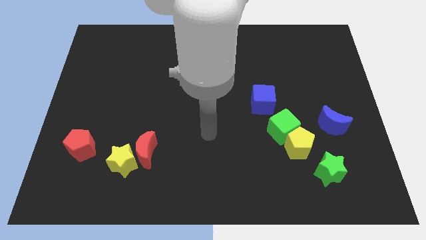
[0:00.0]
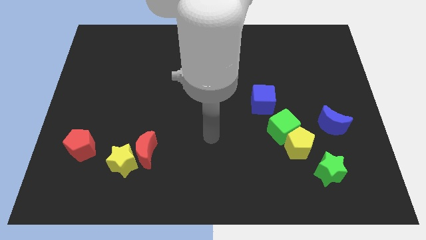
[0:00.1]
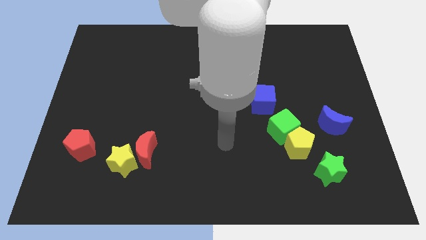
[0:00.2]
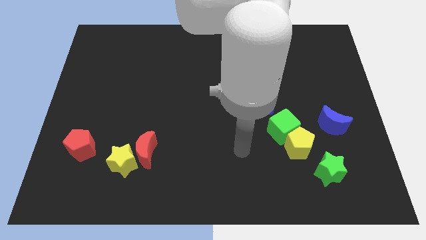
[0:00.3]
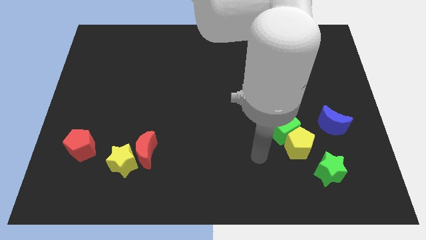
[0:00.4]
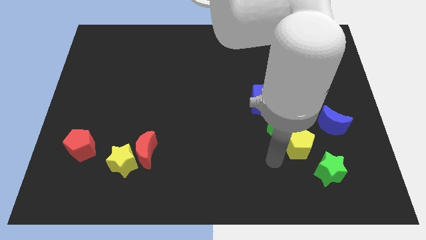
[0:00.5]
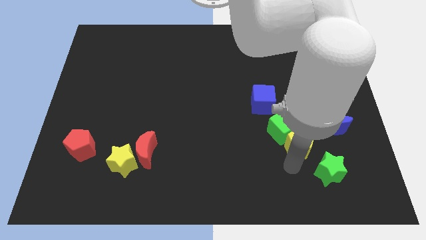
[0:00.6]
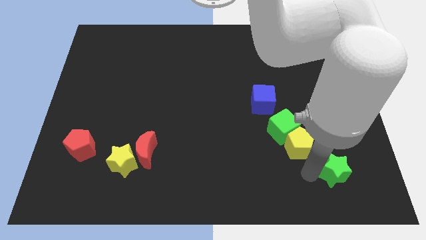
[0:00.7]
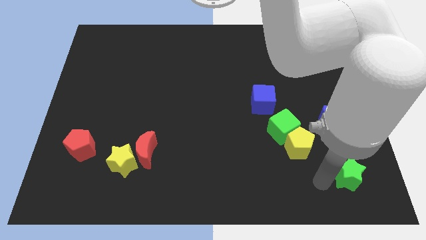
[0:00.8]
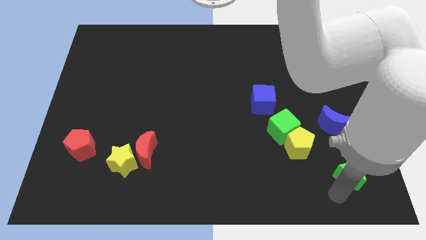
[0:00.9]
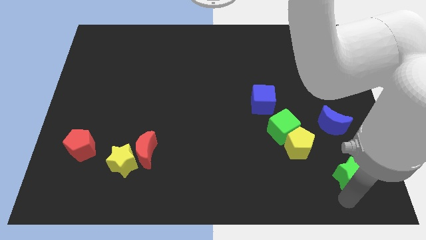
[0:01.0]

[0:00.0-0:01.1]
push the green star slightly up

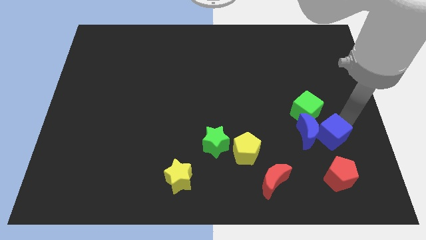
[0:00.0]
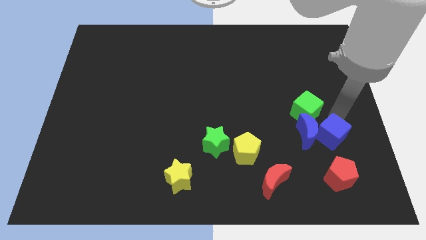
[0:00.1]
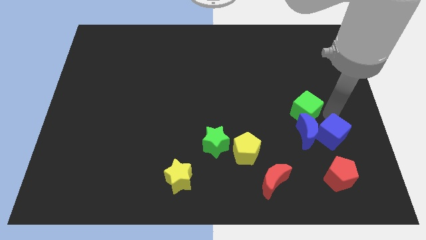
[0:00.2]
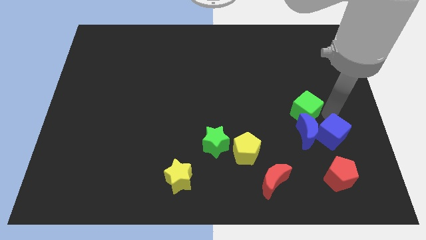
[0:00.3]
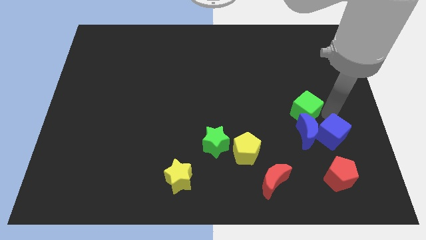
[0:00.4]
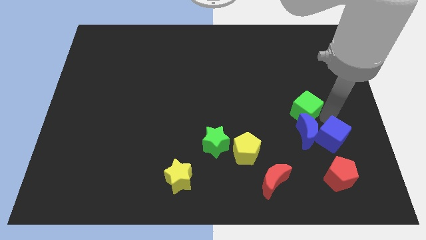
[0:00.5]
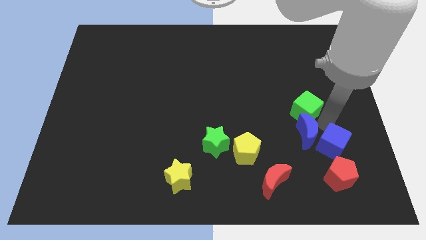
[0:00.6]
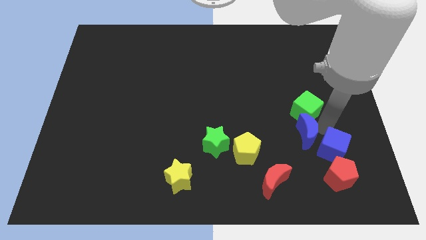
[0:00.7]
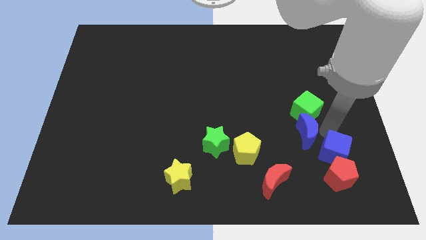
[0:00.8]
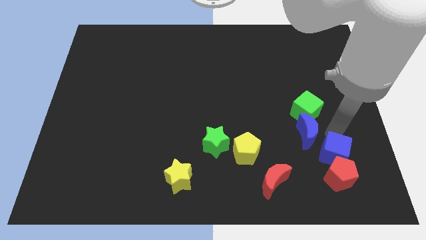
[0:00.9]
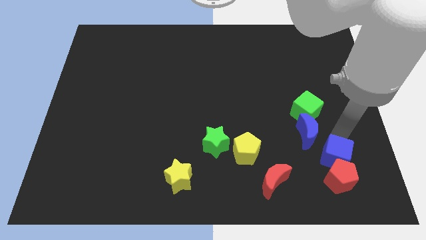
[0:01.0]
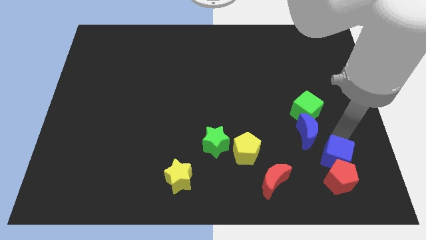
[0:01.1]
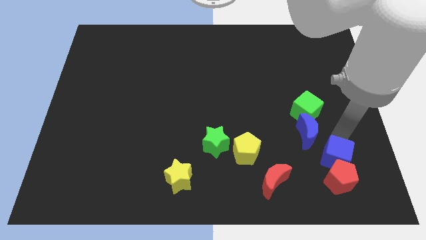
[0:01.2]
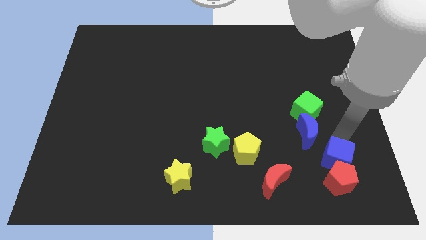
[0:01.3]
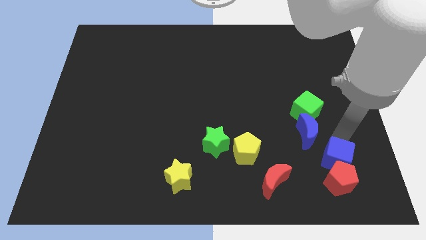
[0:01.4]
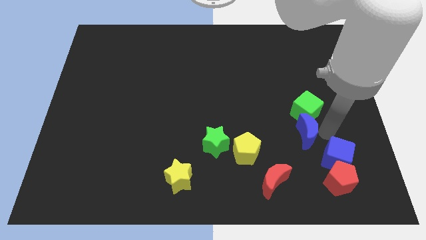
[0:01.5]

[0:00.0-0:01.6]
place the blue cube above the red pentagon

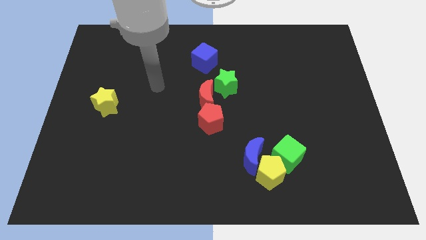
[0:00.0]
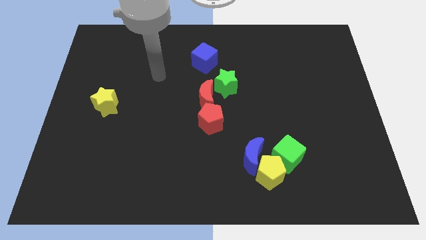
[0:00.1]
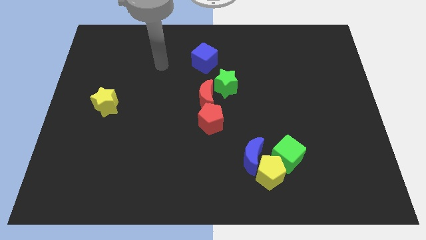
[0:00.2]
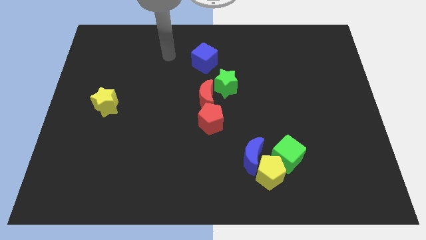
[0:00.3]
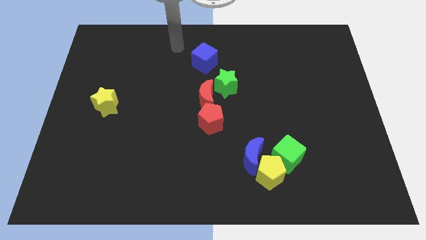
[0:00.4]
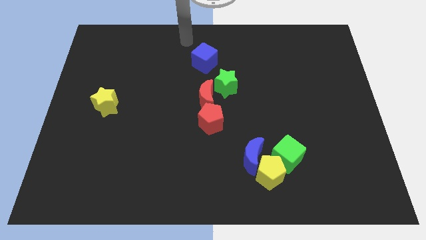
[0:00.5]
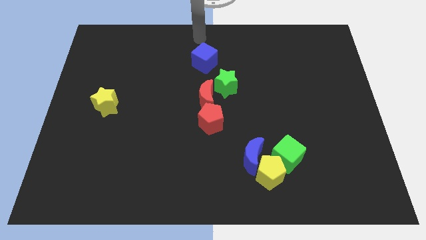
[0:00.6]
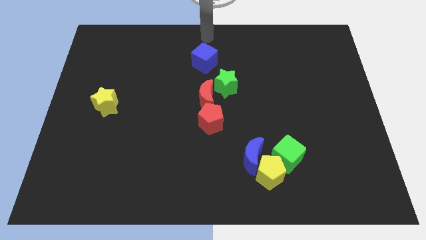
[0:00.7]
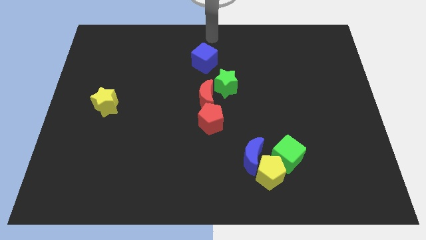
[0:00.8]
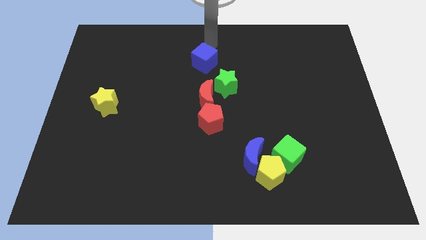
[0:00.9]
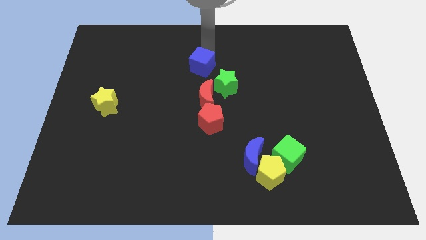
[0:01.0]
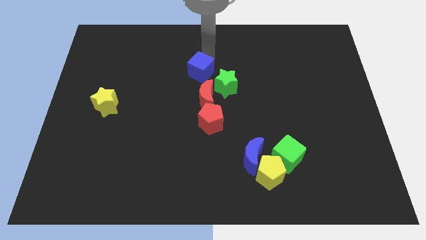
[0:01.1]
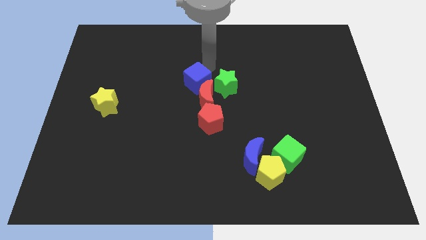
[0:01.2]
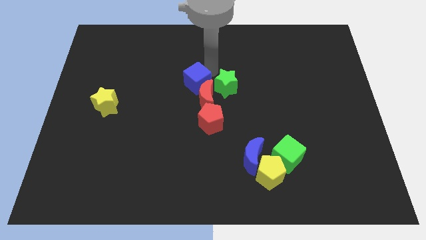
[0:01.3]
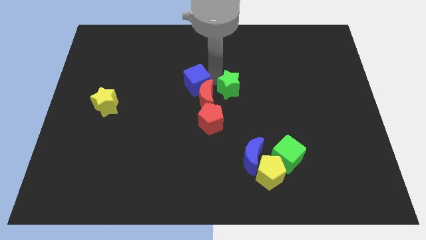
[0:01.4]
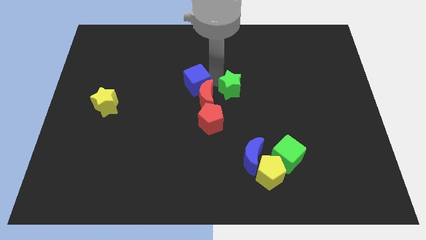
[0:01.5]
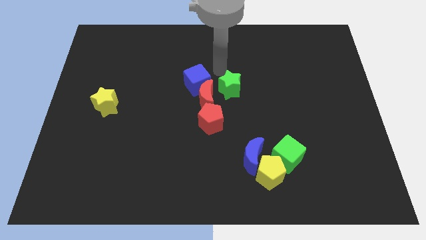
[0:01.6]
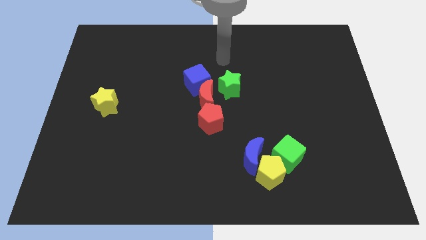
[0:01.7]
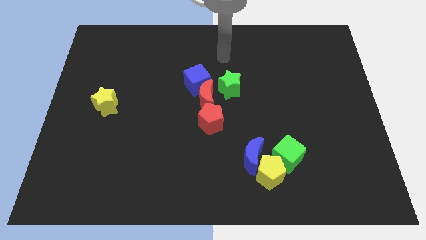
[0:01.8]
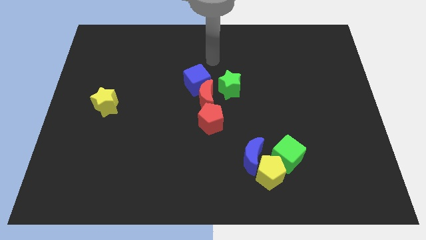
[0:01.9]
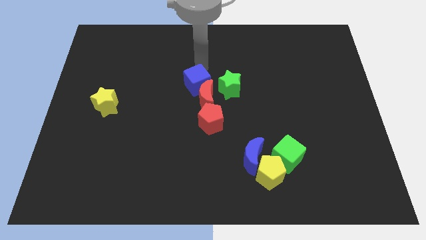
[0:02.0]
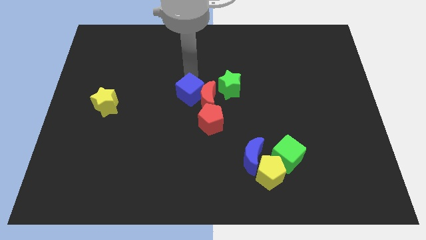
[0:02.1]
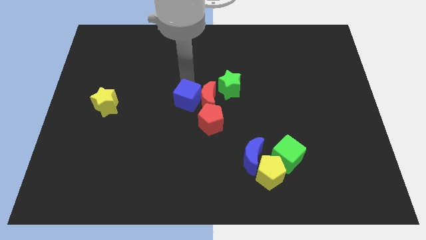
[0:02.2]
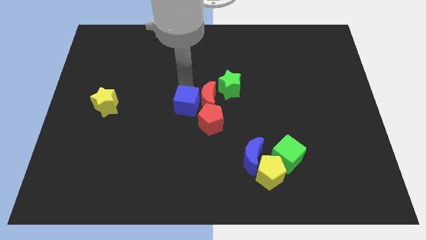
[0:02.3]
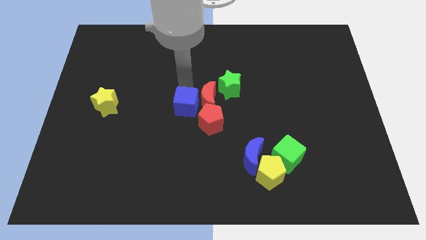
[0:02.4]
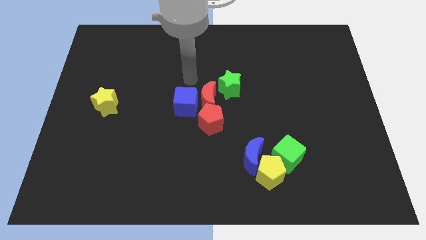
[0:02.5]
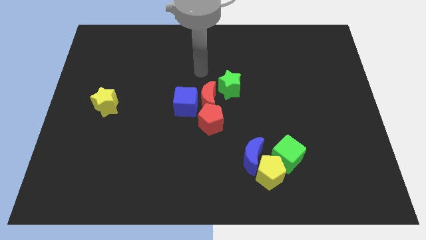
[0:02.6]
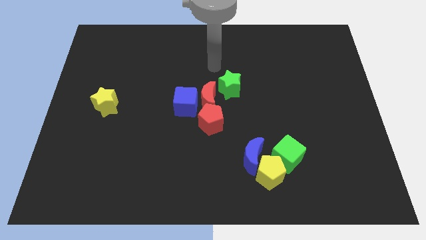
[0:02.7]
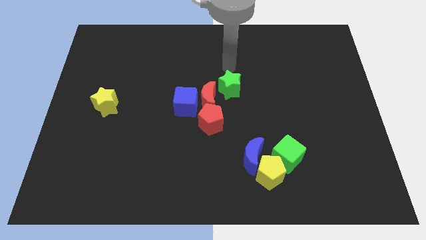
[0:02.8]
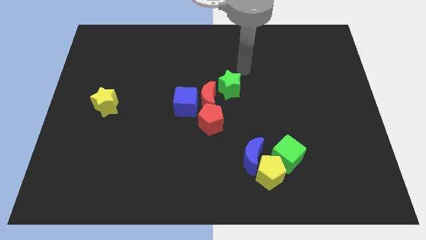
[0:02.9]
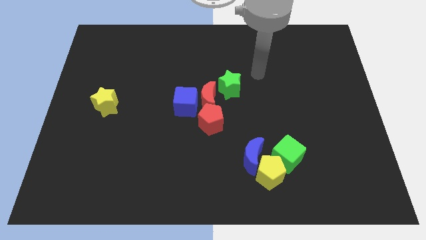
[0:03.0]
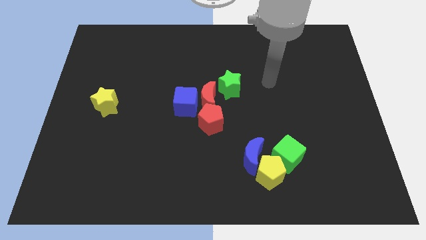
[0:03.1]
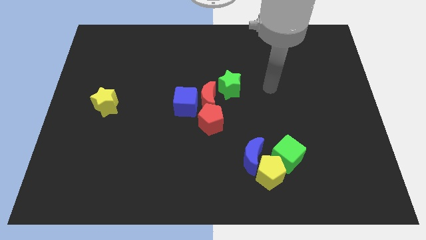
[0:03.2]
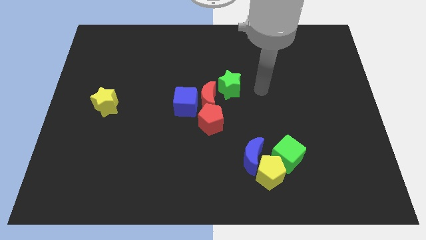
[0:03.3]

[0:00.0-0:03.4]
move the blue cube to the bottom left side of the red moon

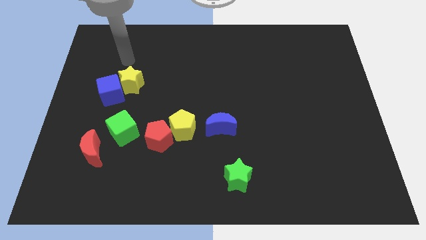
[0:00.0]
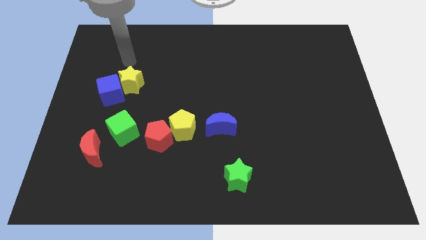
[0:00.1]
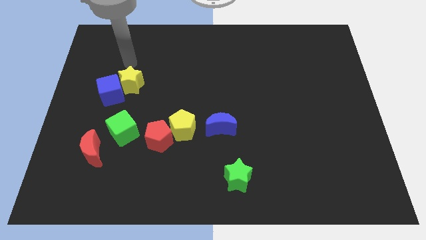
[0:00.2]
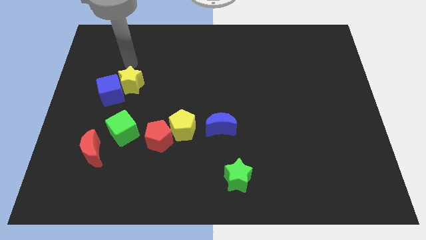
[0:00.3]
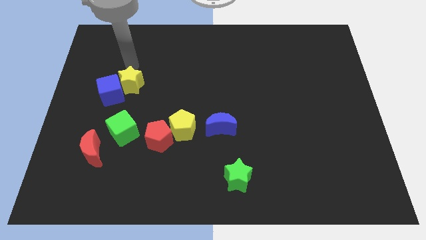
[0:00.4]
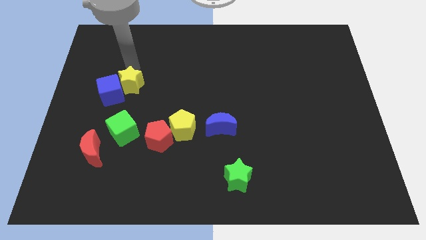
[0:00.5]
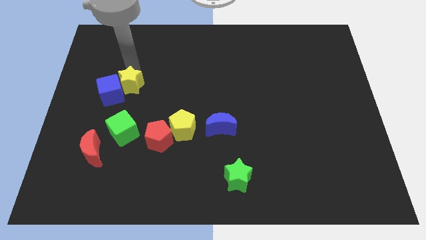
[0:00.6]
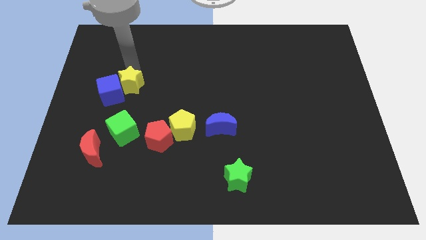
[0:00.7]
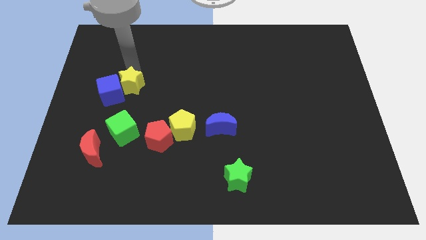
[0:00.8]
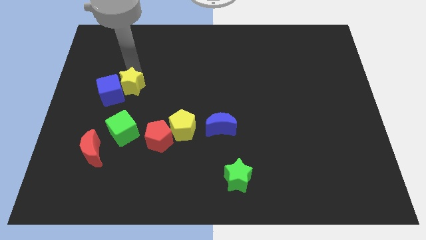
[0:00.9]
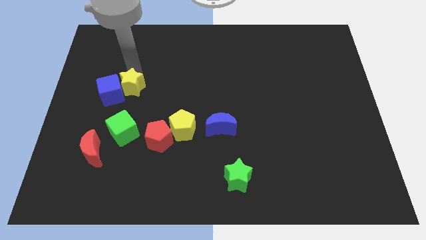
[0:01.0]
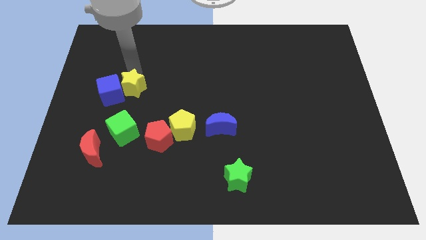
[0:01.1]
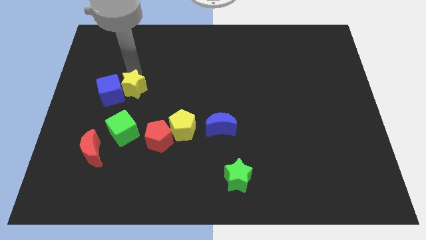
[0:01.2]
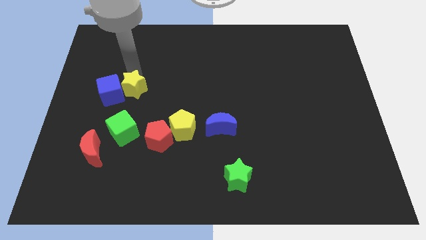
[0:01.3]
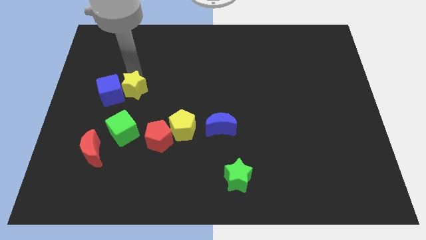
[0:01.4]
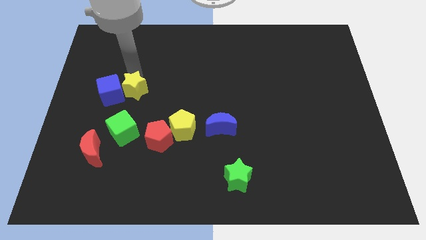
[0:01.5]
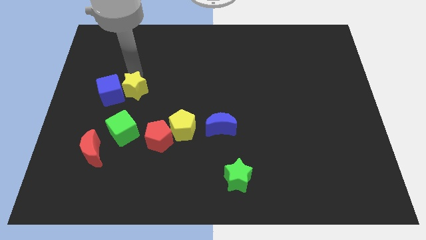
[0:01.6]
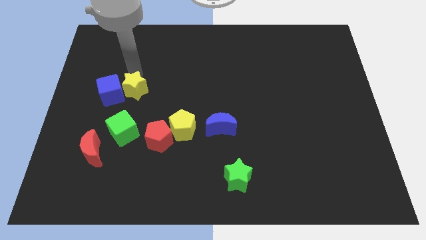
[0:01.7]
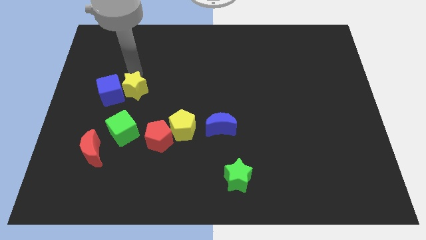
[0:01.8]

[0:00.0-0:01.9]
move the yellow star to the right side of the blue cube

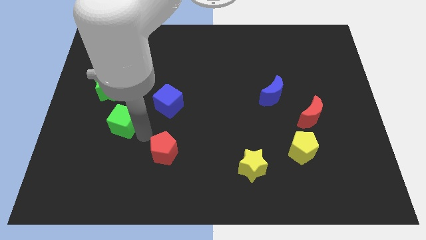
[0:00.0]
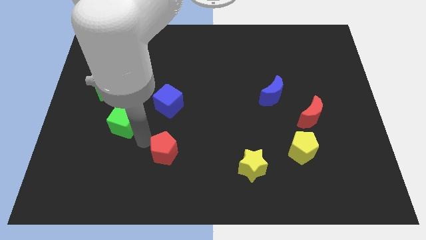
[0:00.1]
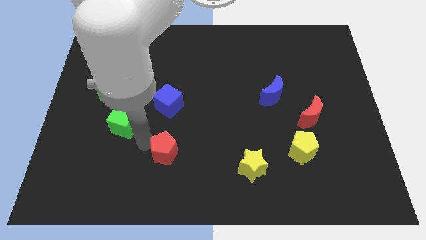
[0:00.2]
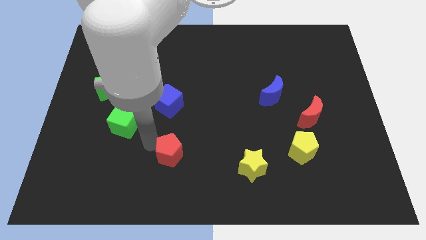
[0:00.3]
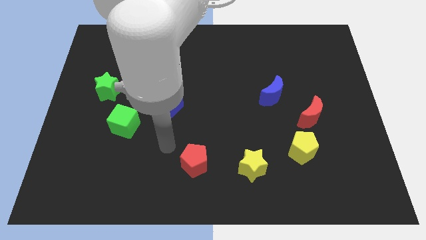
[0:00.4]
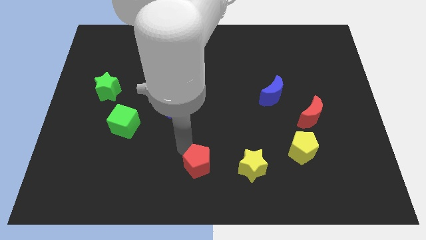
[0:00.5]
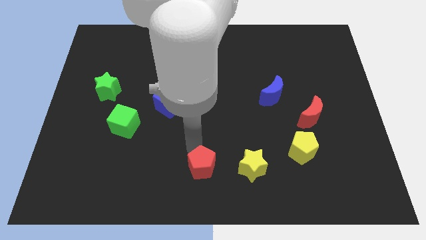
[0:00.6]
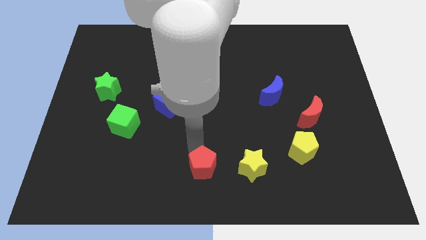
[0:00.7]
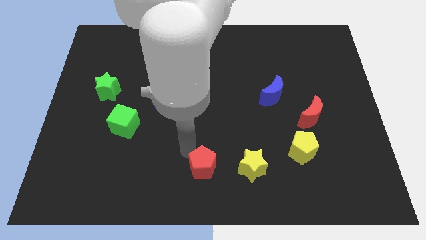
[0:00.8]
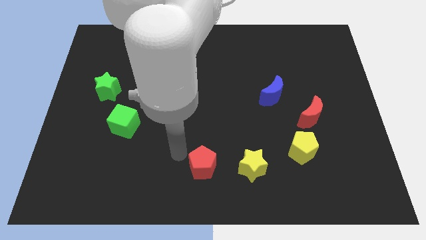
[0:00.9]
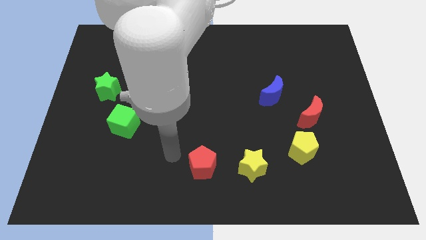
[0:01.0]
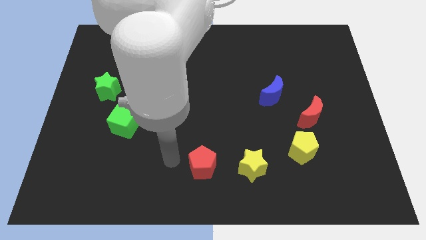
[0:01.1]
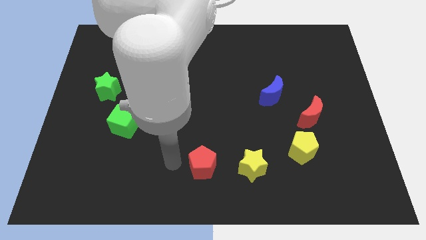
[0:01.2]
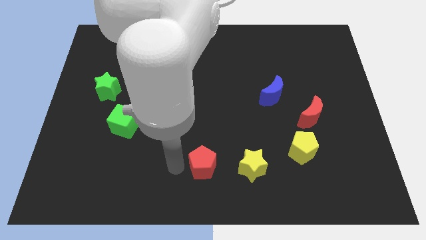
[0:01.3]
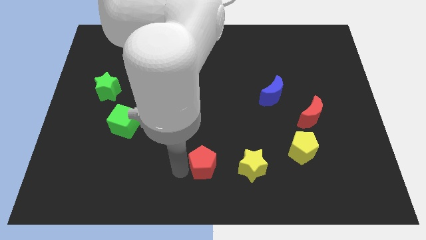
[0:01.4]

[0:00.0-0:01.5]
move the red pentagon to the left of the yellow star
